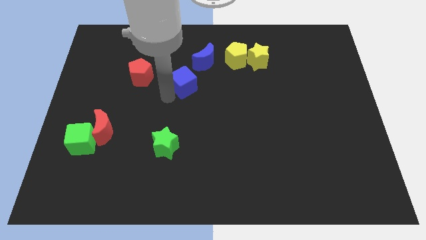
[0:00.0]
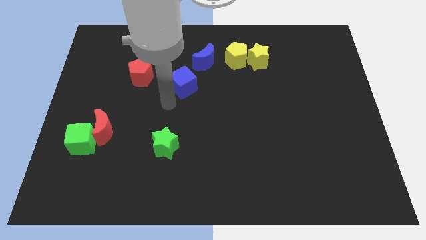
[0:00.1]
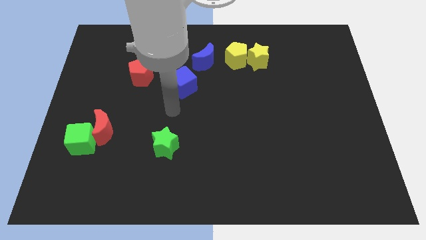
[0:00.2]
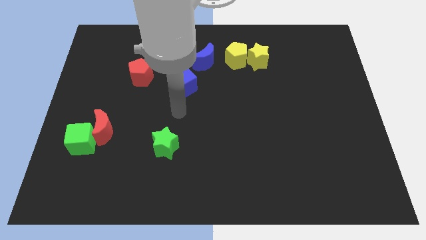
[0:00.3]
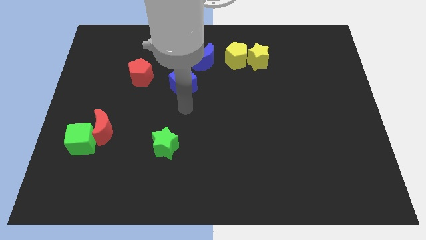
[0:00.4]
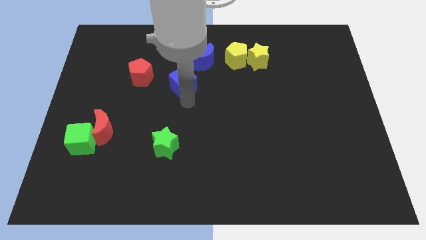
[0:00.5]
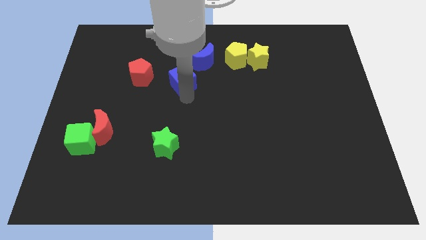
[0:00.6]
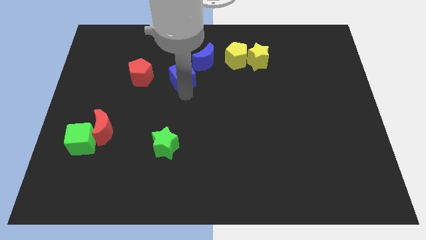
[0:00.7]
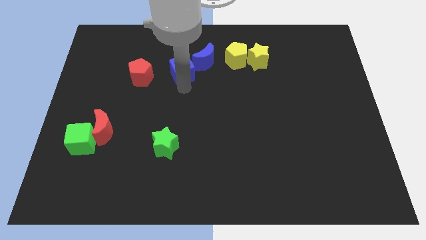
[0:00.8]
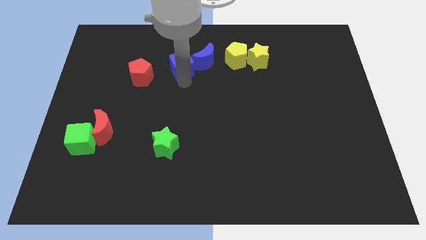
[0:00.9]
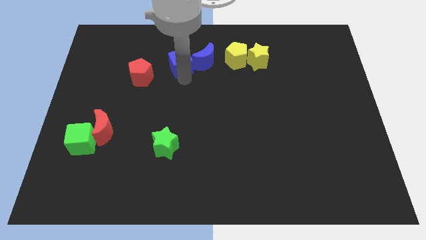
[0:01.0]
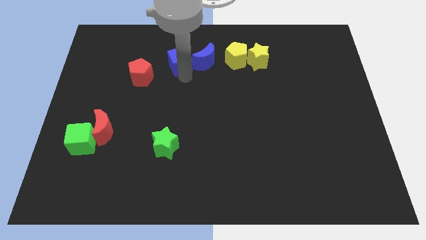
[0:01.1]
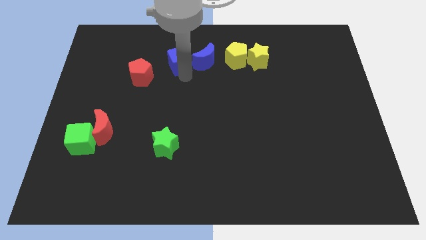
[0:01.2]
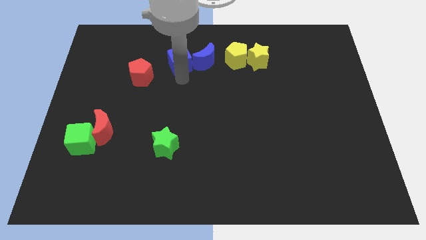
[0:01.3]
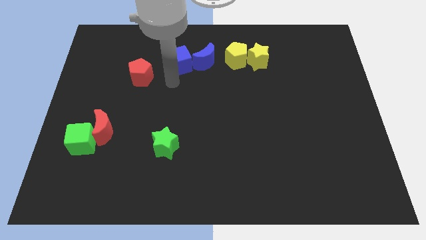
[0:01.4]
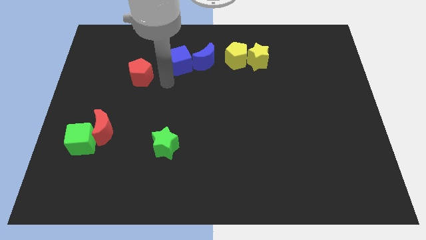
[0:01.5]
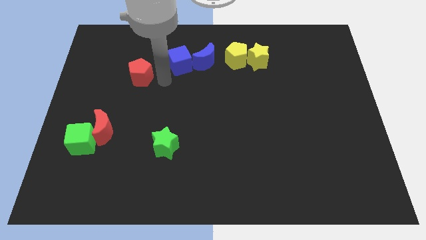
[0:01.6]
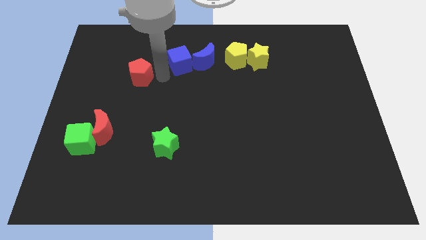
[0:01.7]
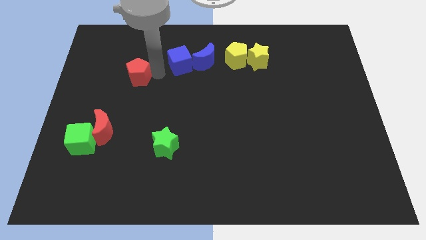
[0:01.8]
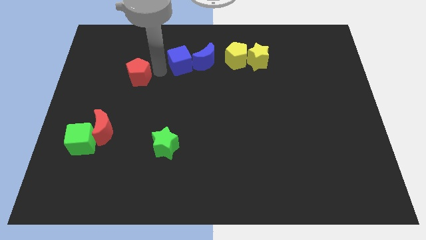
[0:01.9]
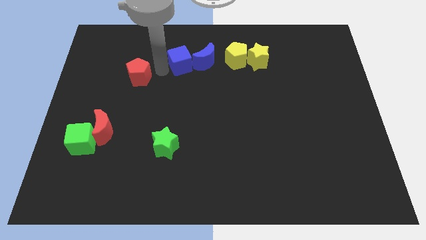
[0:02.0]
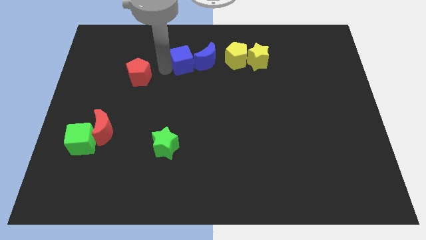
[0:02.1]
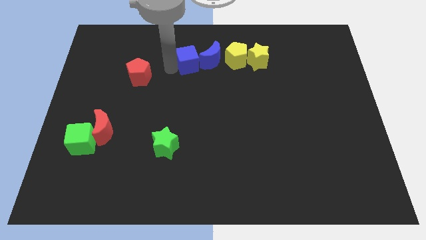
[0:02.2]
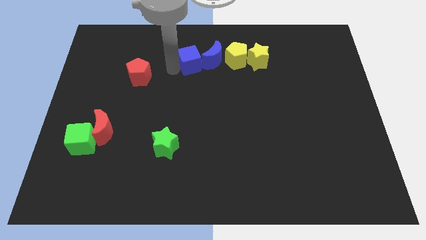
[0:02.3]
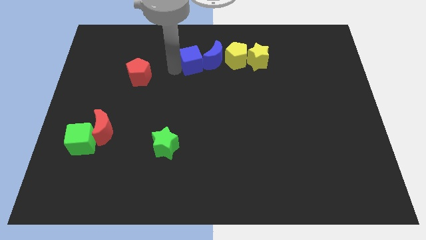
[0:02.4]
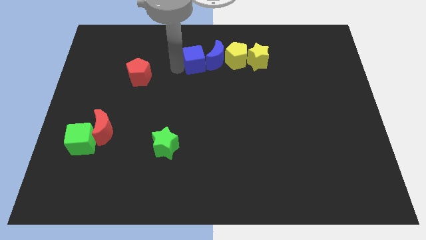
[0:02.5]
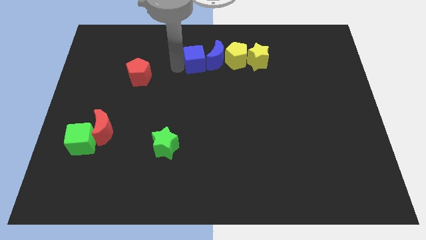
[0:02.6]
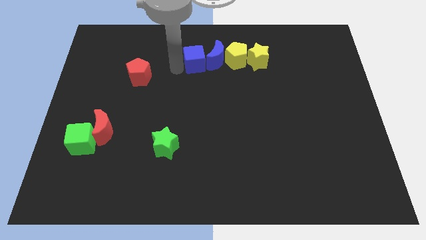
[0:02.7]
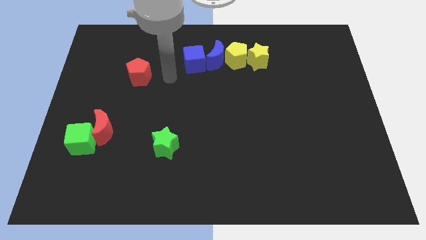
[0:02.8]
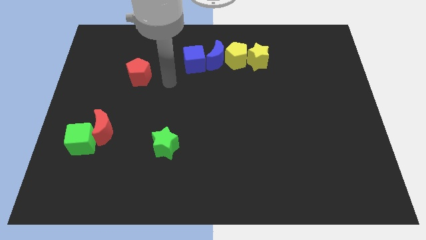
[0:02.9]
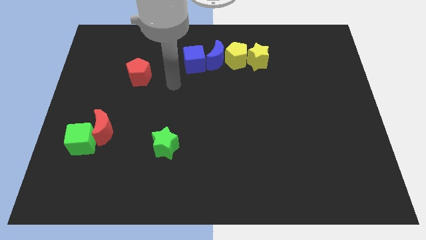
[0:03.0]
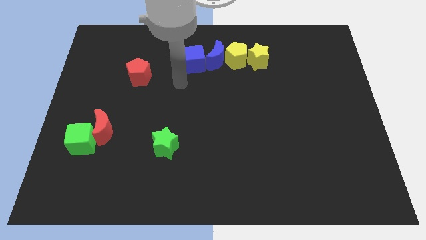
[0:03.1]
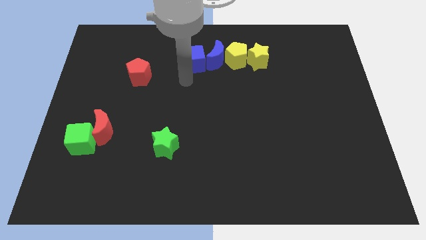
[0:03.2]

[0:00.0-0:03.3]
push the blue cube into the blue moon

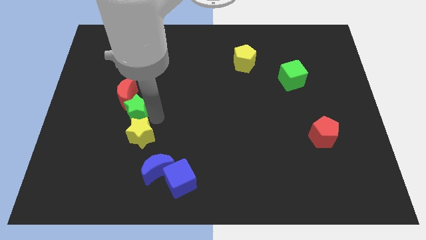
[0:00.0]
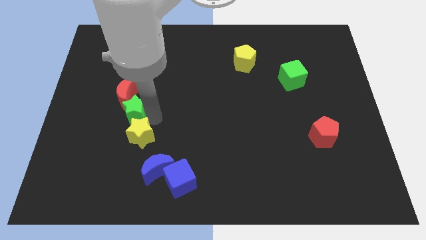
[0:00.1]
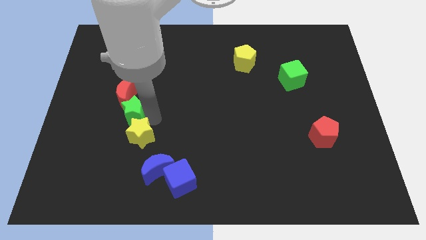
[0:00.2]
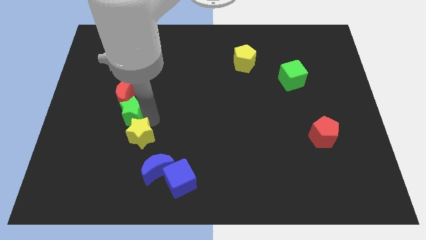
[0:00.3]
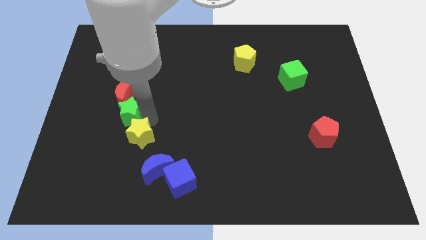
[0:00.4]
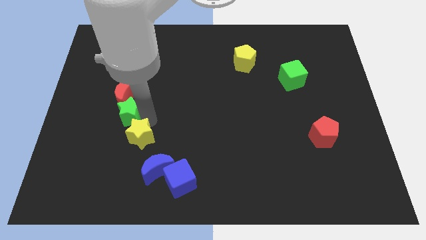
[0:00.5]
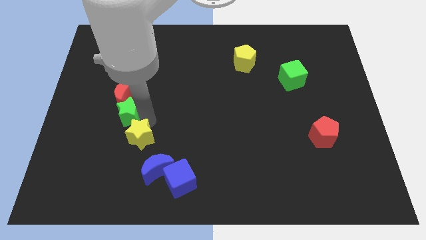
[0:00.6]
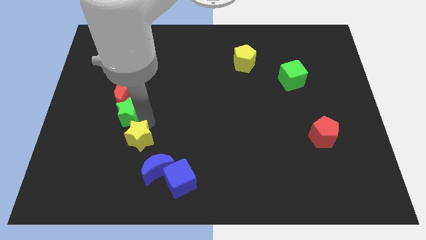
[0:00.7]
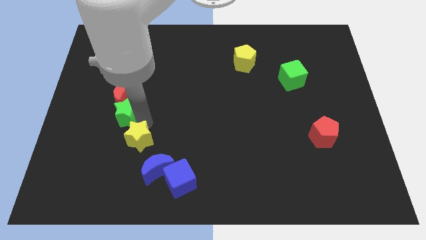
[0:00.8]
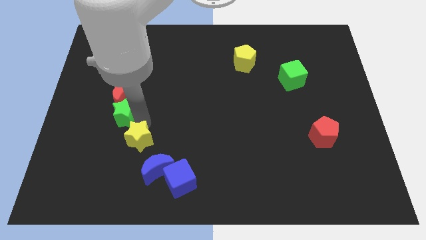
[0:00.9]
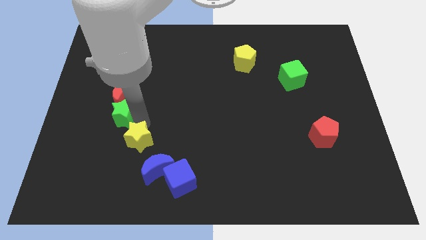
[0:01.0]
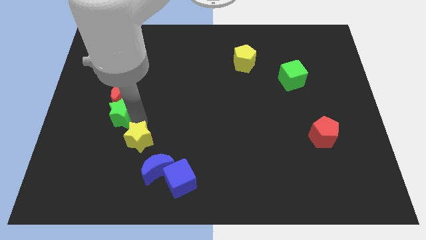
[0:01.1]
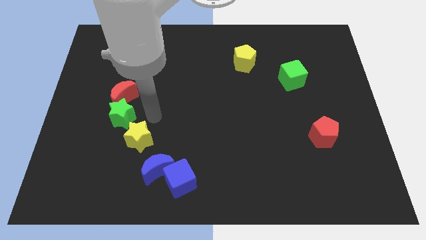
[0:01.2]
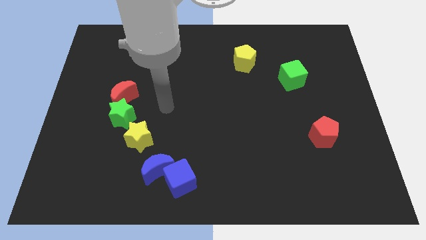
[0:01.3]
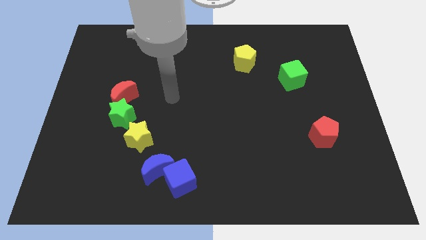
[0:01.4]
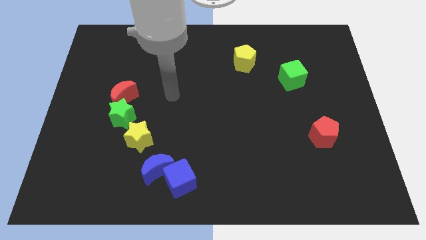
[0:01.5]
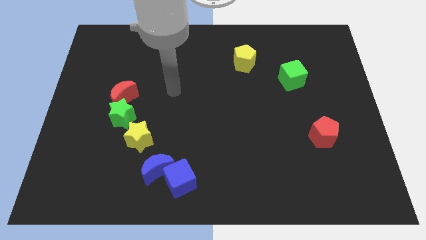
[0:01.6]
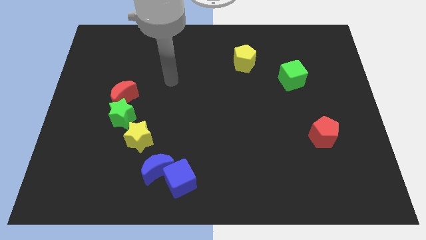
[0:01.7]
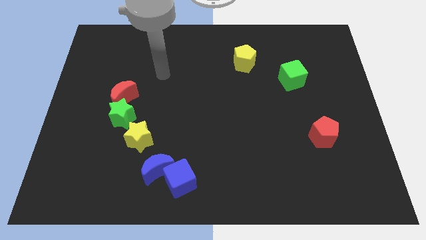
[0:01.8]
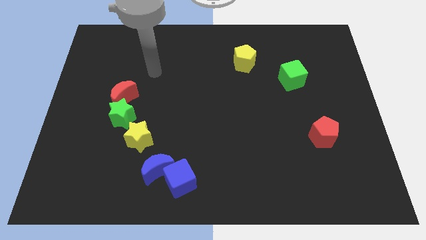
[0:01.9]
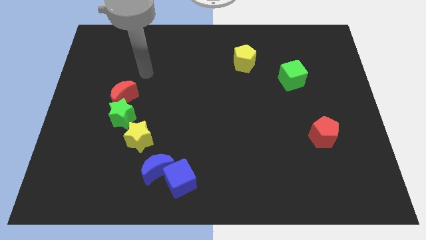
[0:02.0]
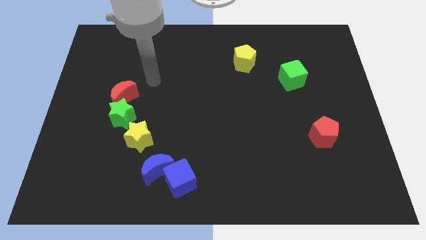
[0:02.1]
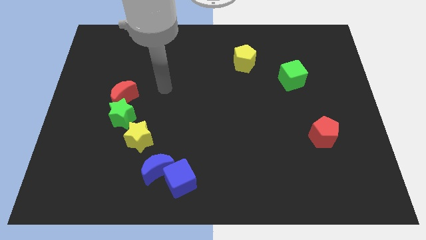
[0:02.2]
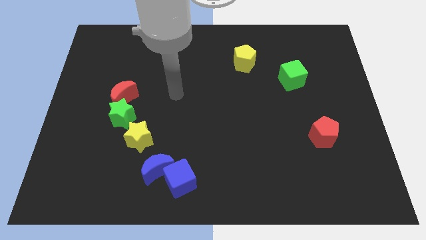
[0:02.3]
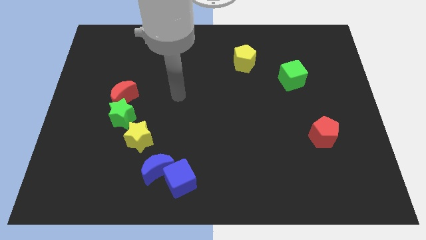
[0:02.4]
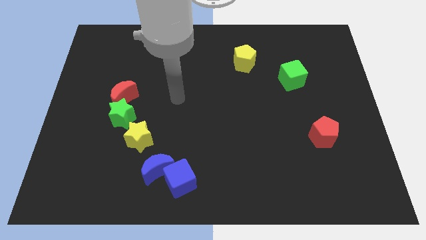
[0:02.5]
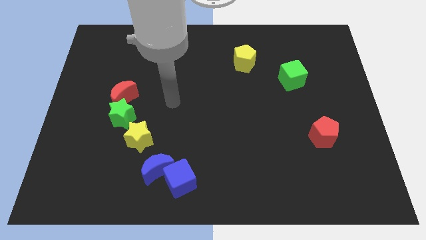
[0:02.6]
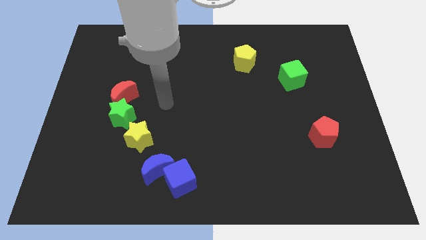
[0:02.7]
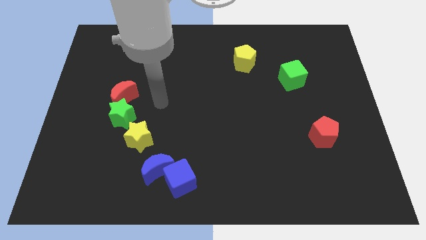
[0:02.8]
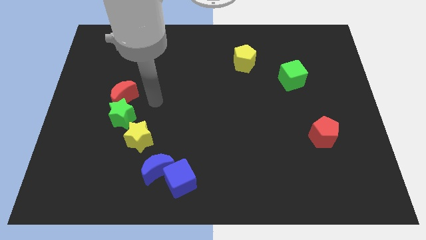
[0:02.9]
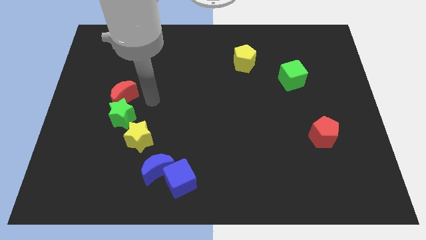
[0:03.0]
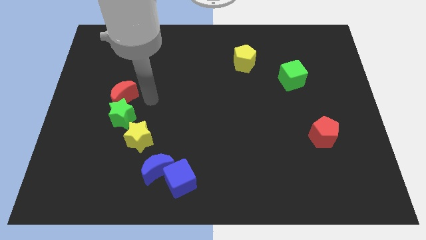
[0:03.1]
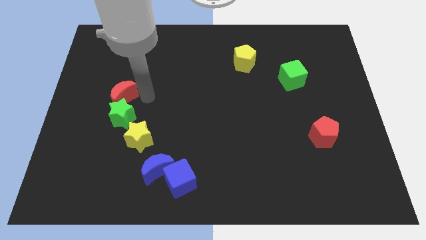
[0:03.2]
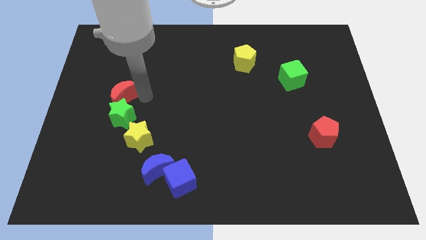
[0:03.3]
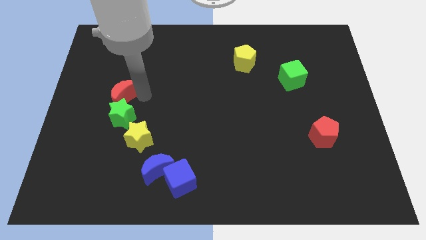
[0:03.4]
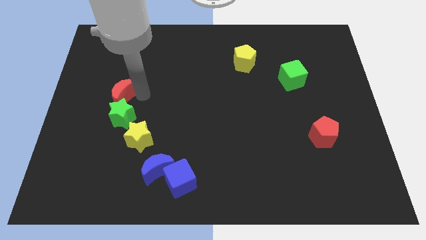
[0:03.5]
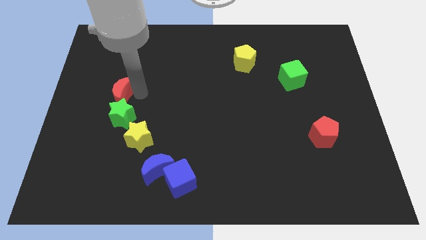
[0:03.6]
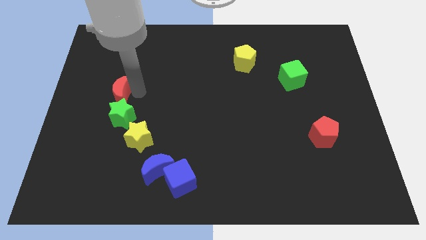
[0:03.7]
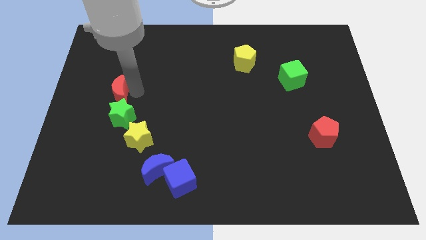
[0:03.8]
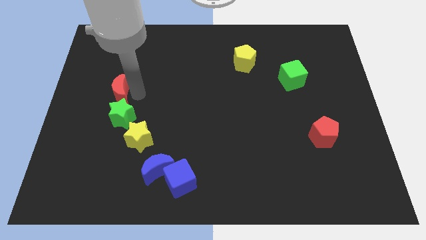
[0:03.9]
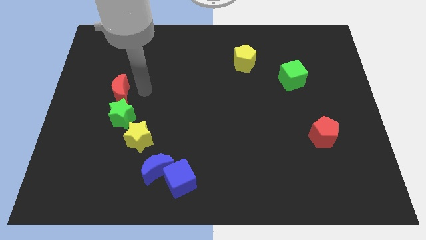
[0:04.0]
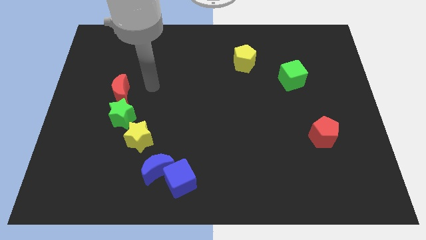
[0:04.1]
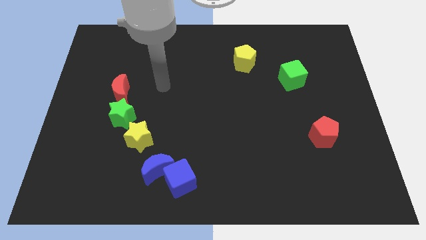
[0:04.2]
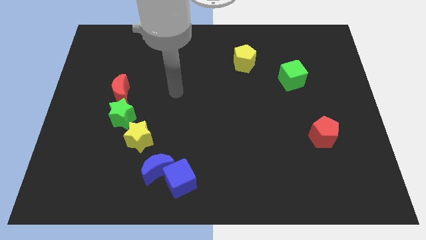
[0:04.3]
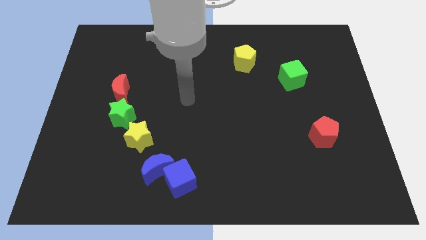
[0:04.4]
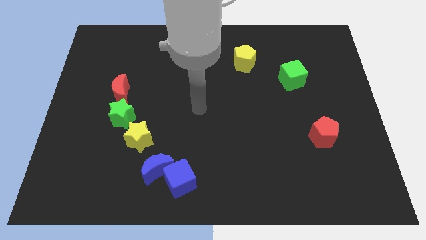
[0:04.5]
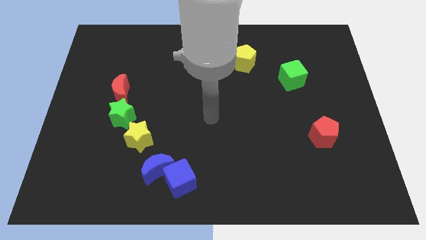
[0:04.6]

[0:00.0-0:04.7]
adjust the red crescent to the top of the green star

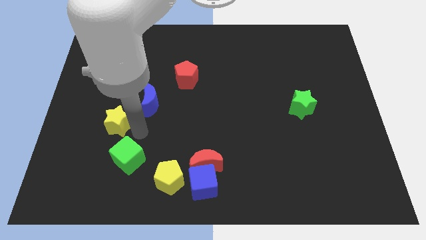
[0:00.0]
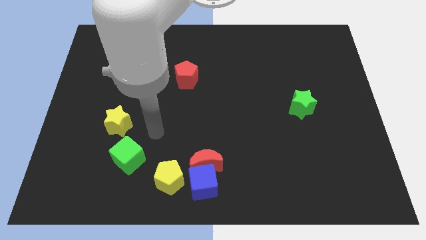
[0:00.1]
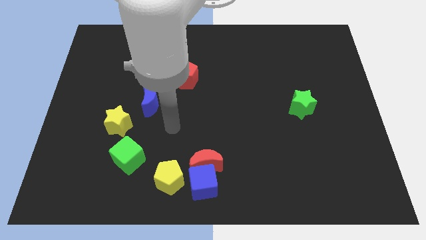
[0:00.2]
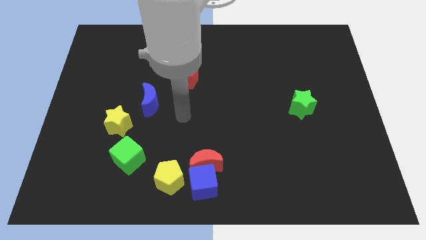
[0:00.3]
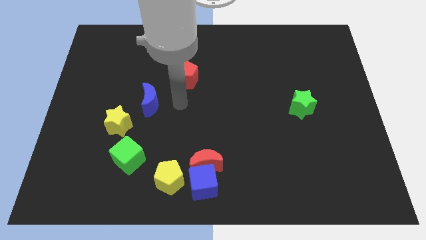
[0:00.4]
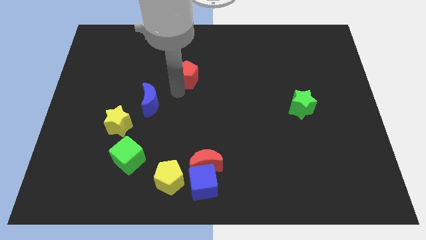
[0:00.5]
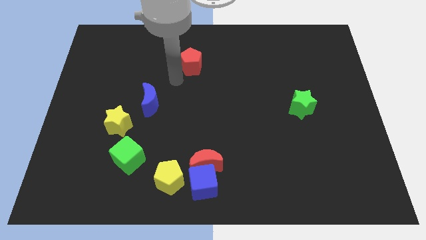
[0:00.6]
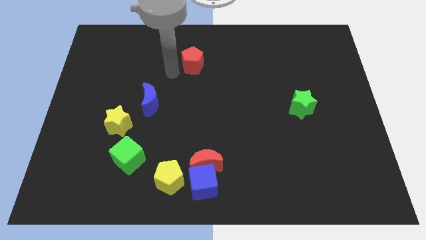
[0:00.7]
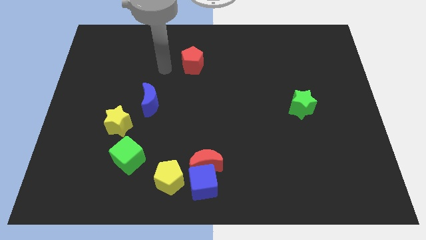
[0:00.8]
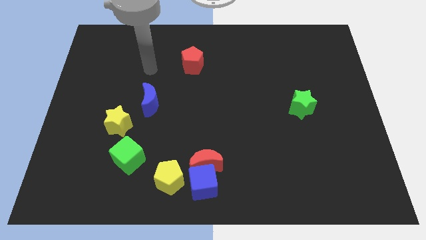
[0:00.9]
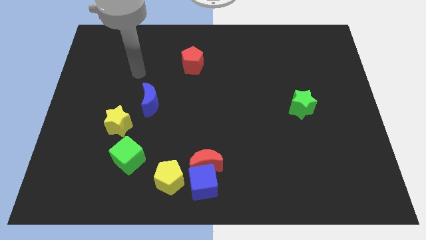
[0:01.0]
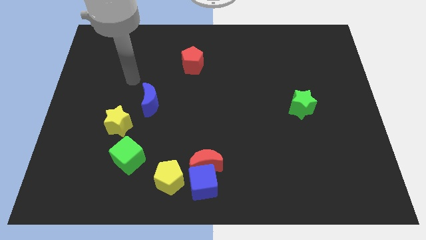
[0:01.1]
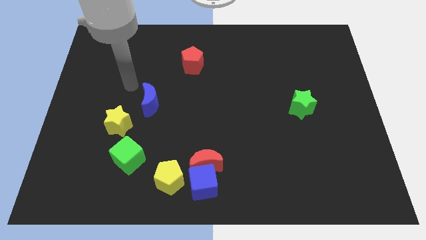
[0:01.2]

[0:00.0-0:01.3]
push the red pentagon slightly upwards
